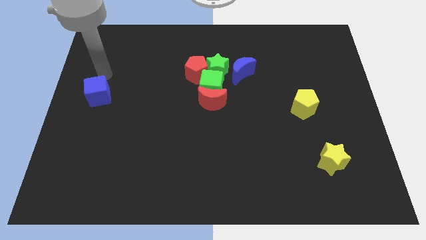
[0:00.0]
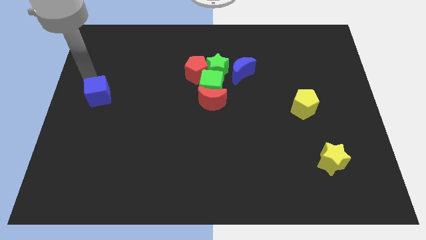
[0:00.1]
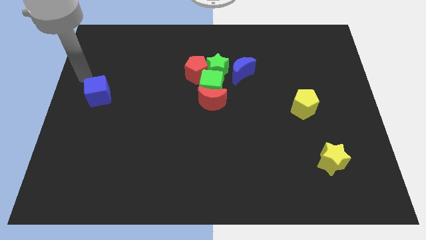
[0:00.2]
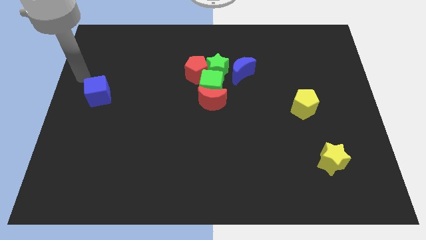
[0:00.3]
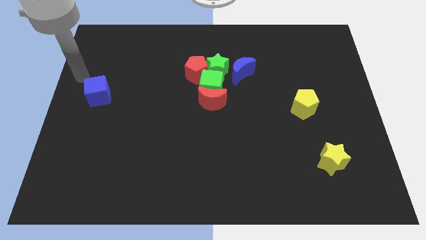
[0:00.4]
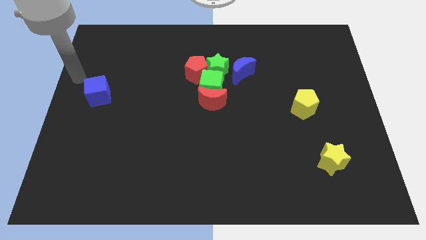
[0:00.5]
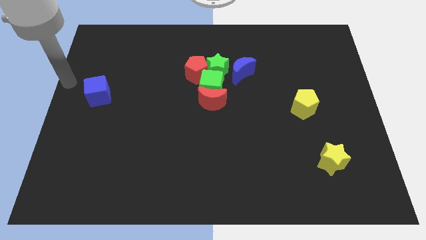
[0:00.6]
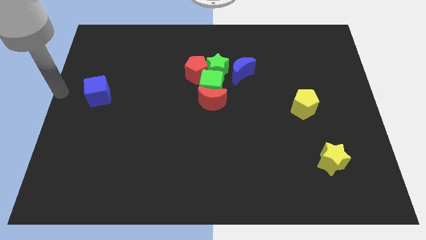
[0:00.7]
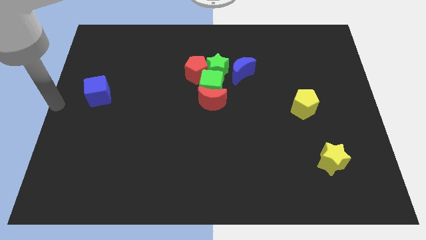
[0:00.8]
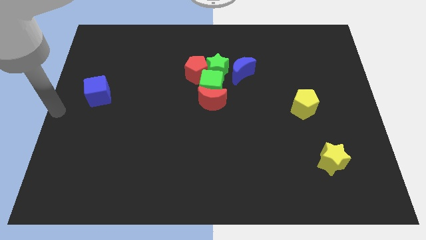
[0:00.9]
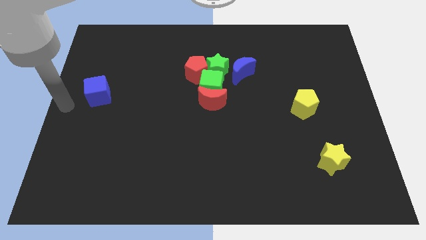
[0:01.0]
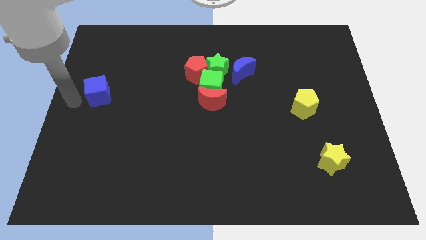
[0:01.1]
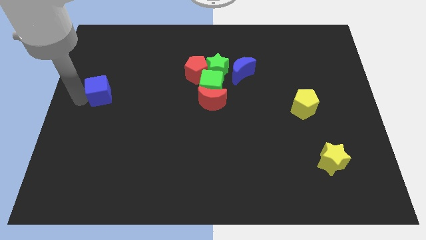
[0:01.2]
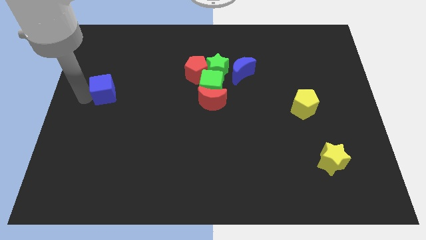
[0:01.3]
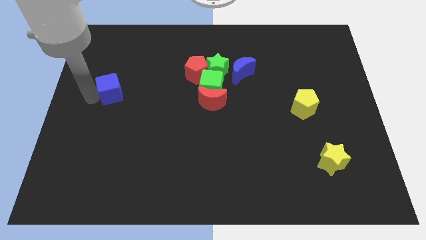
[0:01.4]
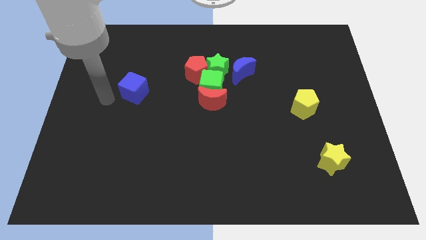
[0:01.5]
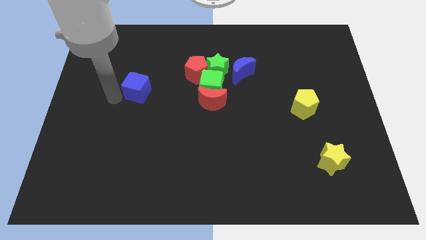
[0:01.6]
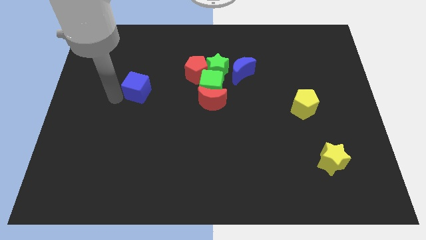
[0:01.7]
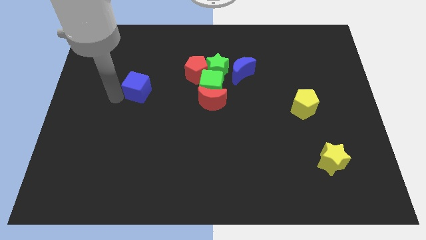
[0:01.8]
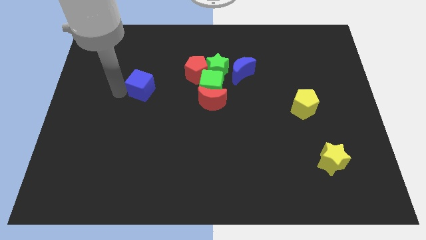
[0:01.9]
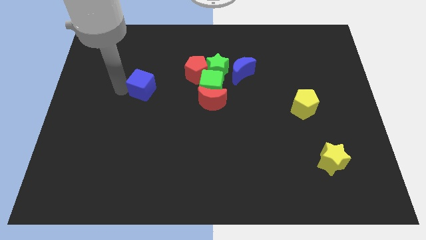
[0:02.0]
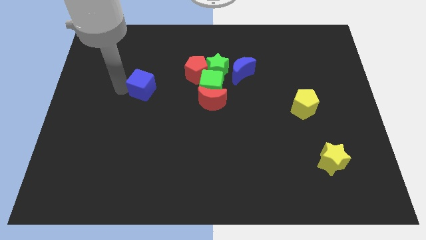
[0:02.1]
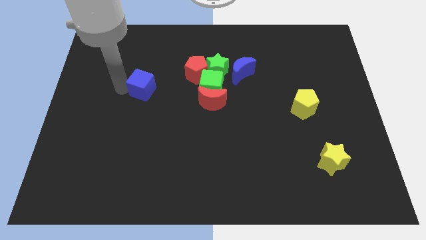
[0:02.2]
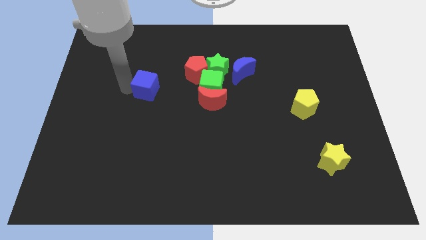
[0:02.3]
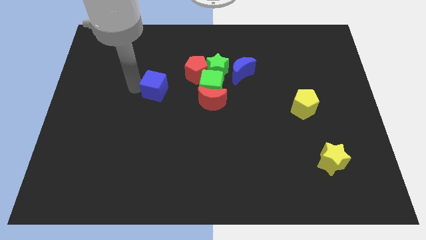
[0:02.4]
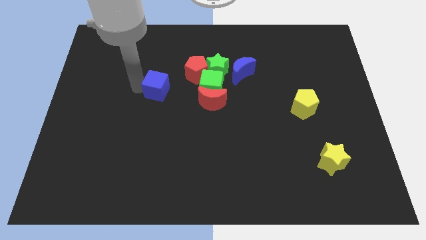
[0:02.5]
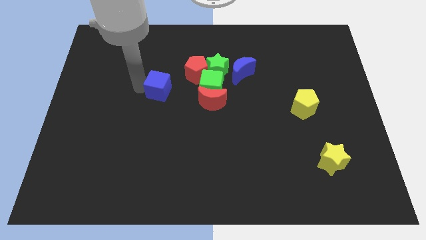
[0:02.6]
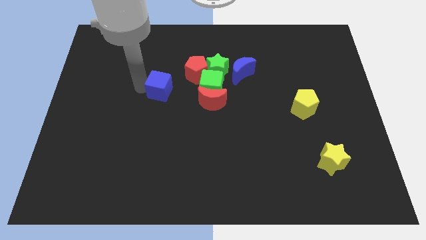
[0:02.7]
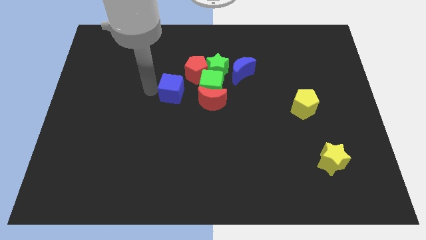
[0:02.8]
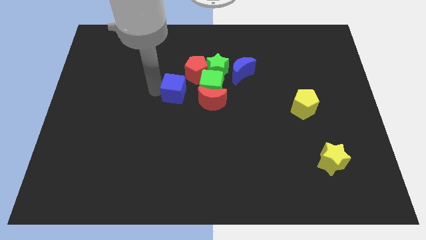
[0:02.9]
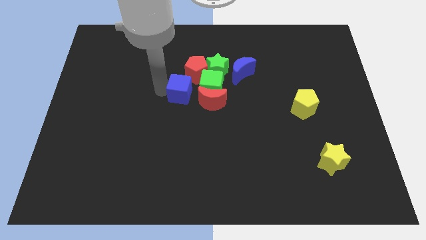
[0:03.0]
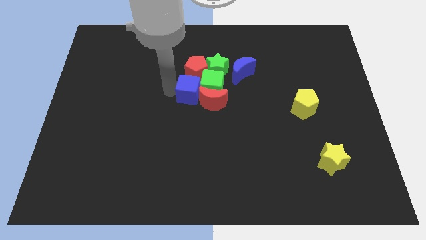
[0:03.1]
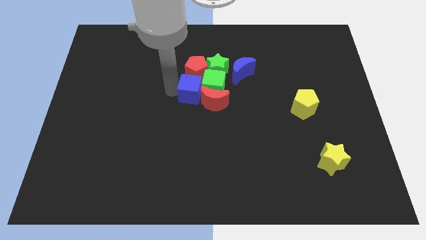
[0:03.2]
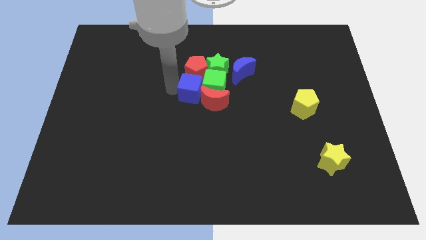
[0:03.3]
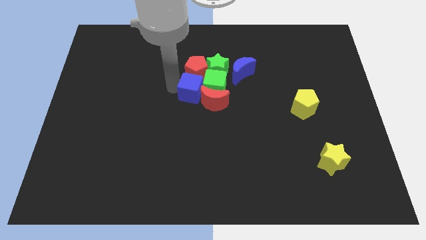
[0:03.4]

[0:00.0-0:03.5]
slide the blue cube into the left of the green cube

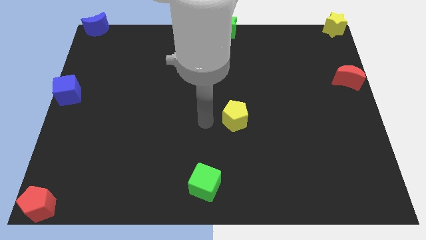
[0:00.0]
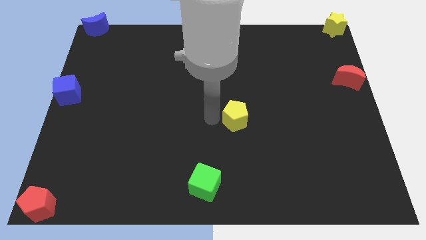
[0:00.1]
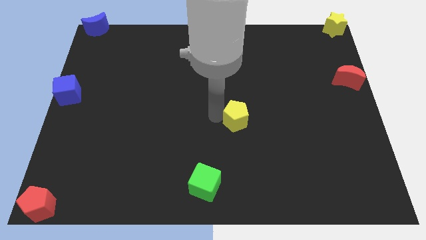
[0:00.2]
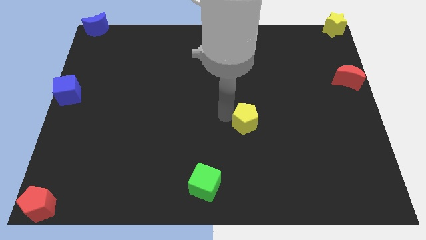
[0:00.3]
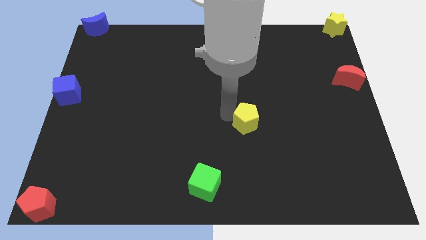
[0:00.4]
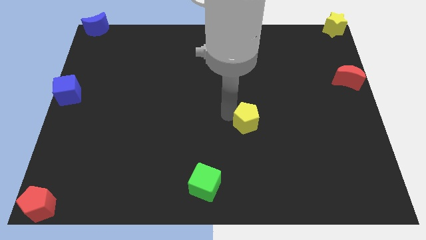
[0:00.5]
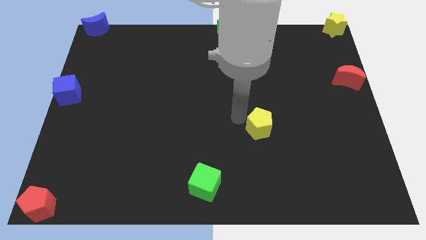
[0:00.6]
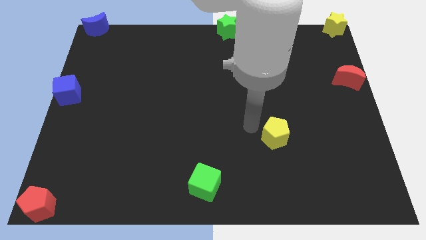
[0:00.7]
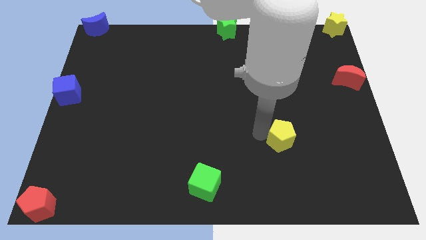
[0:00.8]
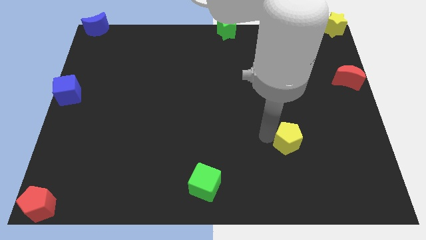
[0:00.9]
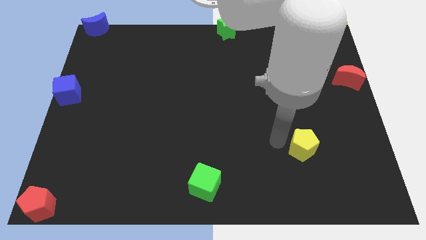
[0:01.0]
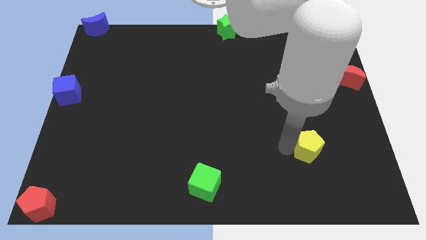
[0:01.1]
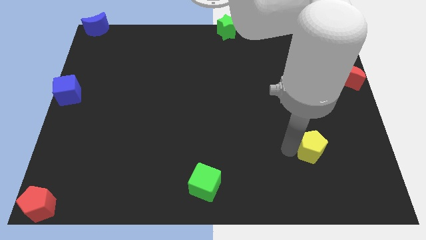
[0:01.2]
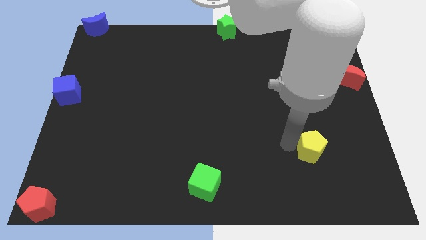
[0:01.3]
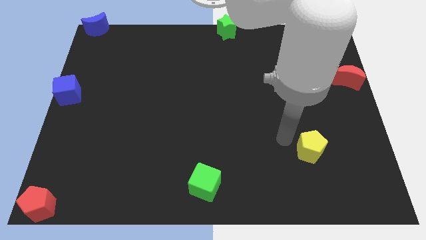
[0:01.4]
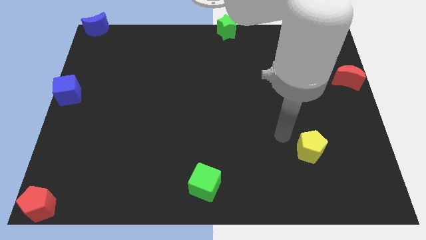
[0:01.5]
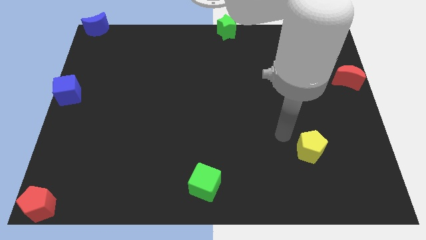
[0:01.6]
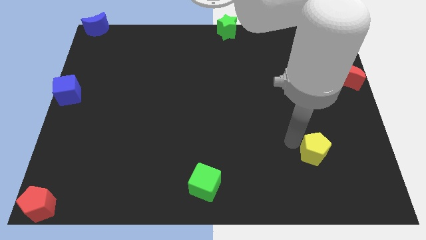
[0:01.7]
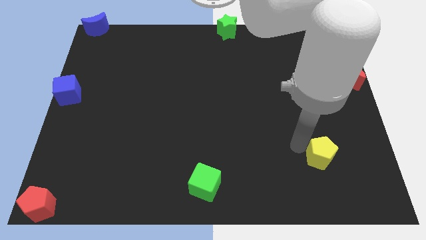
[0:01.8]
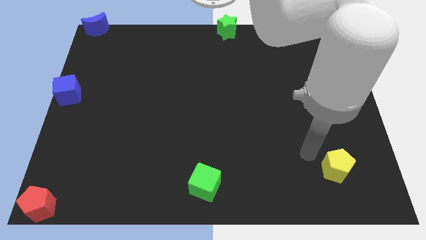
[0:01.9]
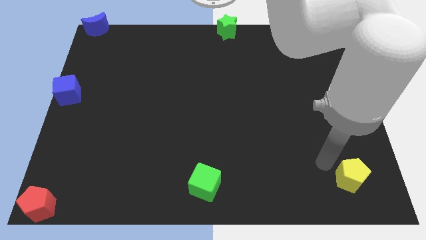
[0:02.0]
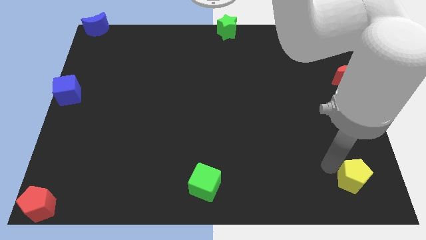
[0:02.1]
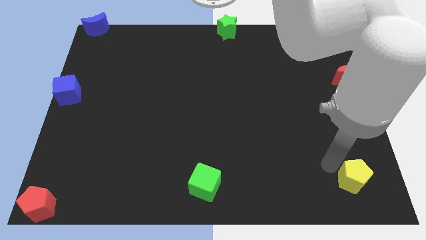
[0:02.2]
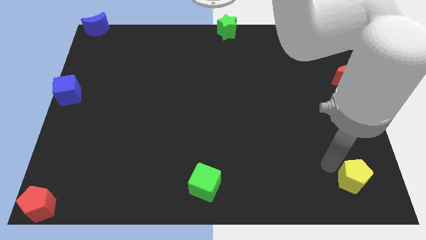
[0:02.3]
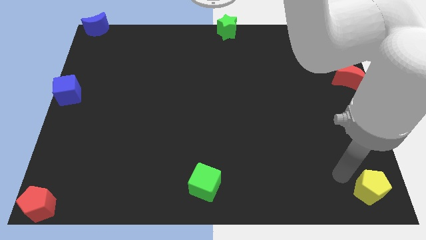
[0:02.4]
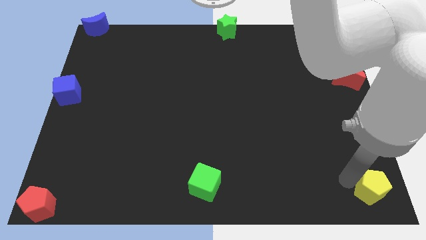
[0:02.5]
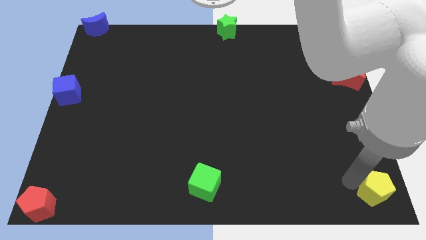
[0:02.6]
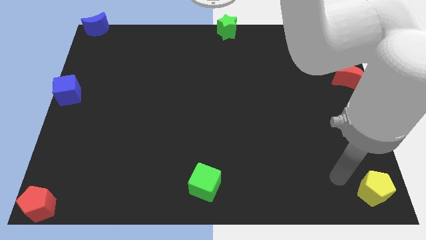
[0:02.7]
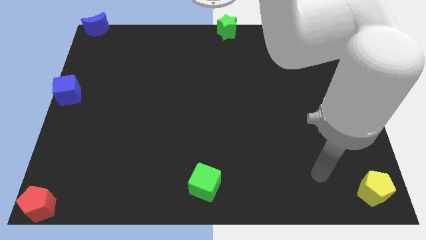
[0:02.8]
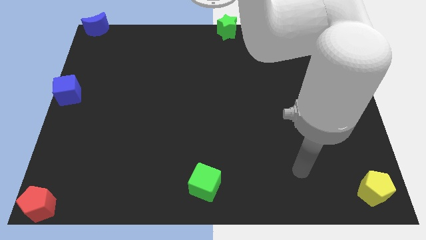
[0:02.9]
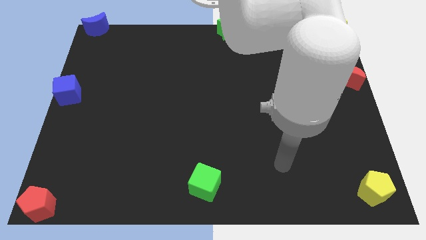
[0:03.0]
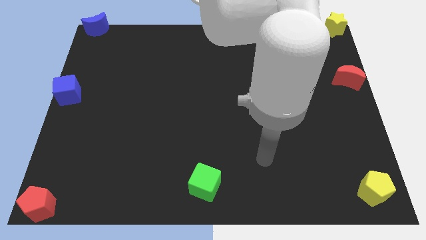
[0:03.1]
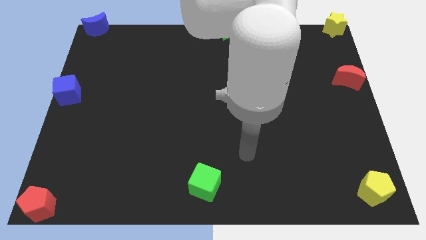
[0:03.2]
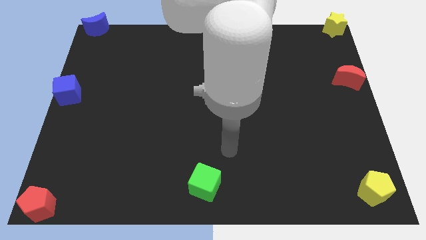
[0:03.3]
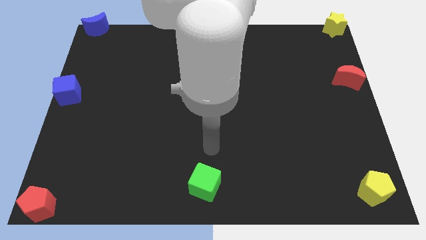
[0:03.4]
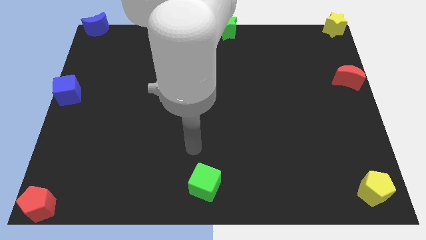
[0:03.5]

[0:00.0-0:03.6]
push the yellow pentagon to the right bottom corner of the board

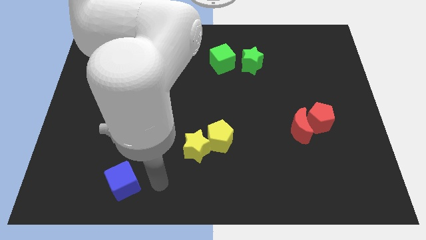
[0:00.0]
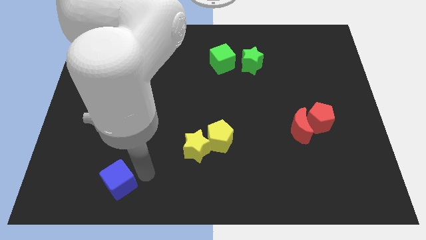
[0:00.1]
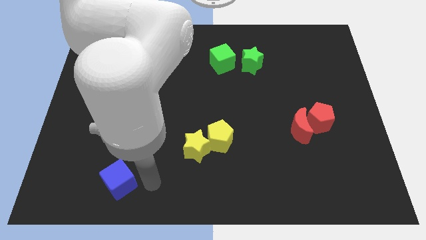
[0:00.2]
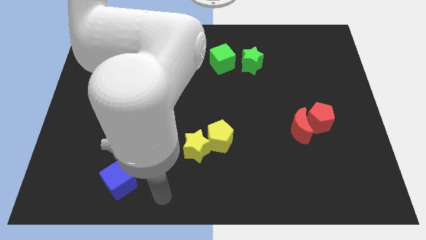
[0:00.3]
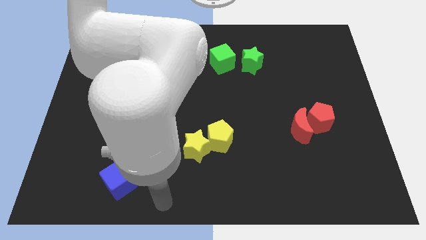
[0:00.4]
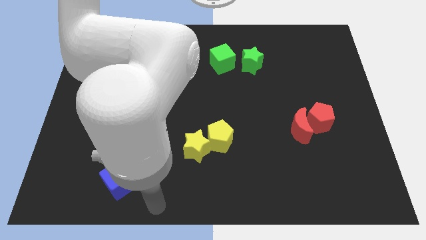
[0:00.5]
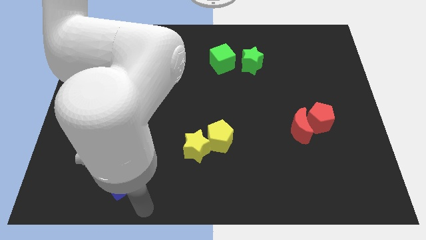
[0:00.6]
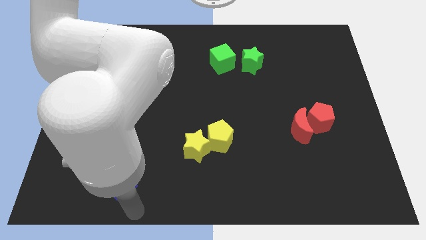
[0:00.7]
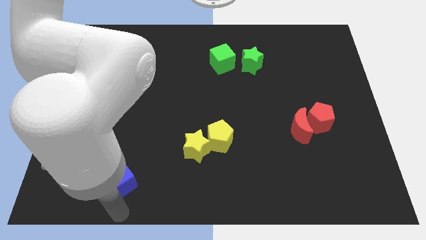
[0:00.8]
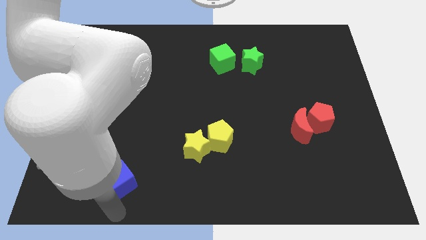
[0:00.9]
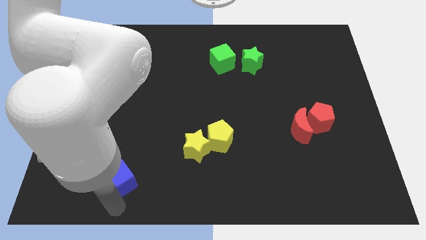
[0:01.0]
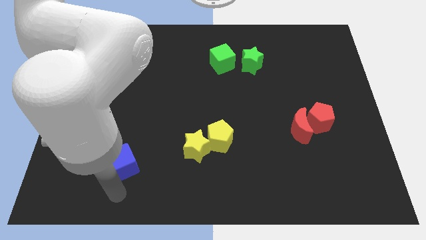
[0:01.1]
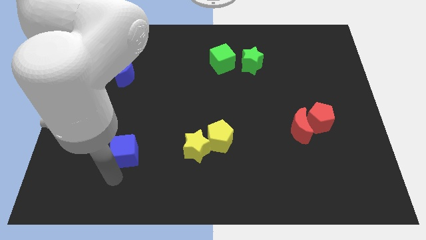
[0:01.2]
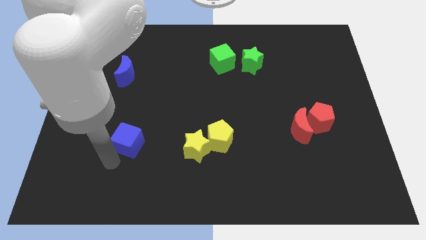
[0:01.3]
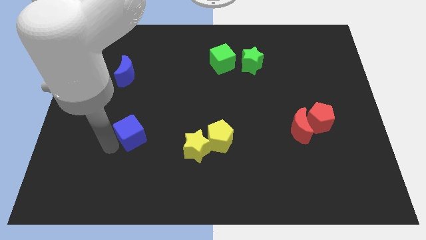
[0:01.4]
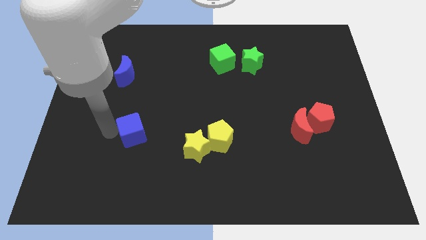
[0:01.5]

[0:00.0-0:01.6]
place blue cube to the left of yellow star

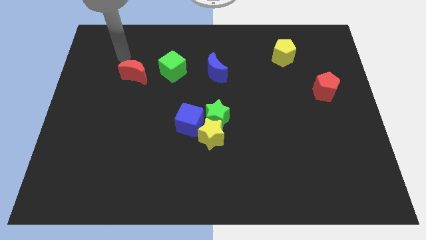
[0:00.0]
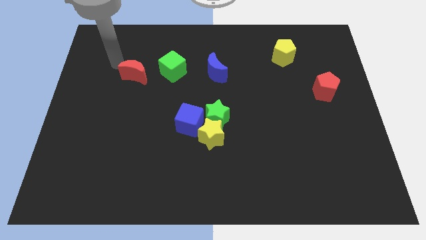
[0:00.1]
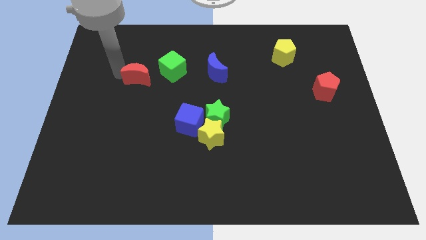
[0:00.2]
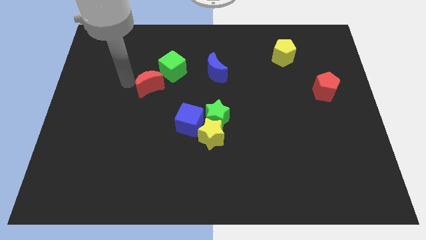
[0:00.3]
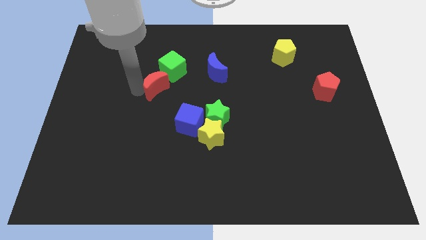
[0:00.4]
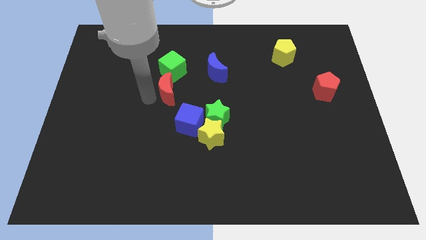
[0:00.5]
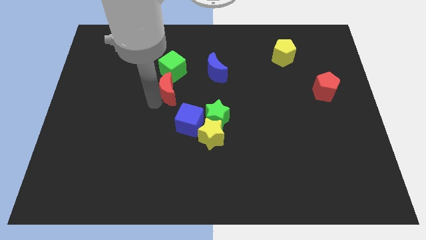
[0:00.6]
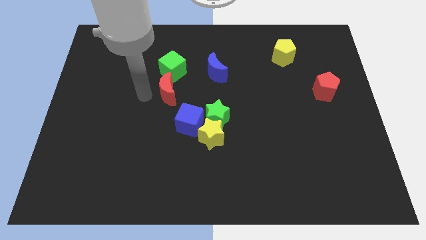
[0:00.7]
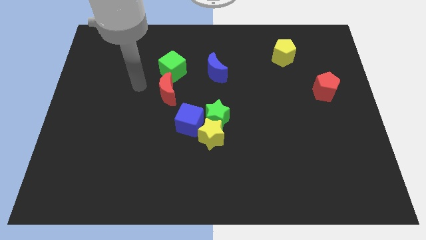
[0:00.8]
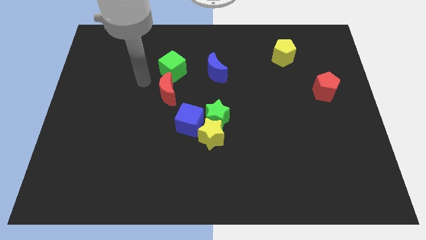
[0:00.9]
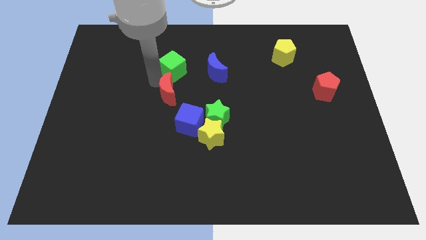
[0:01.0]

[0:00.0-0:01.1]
place the red pentagon to the bottom of the green cube
